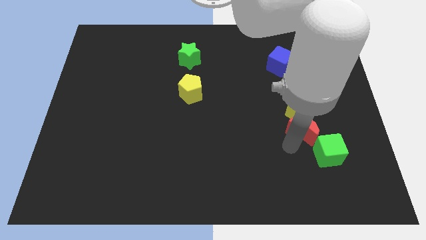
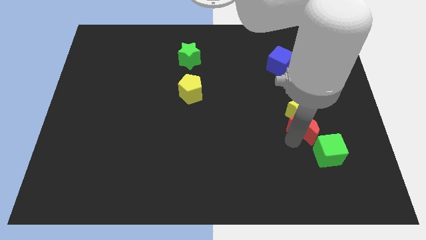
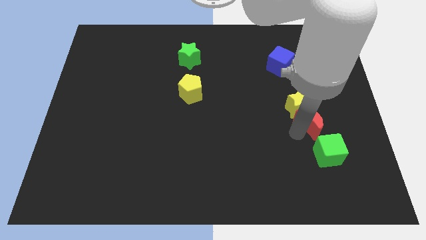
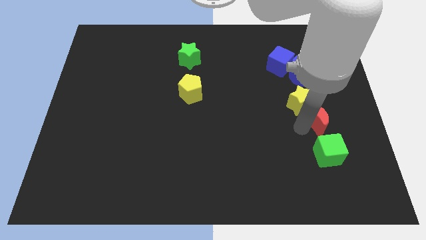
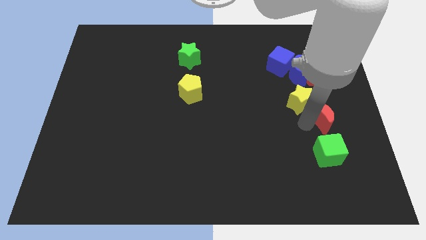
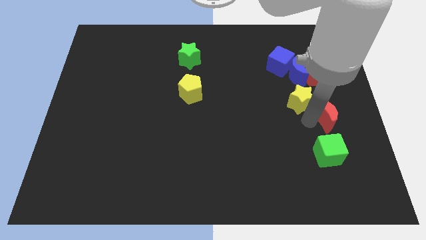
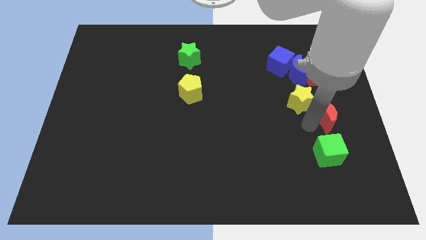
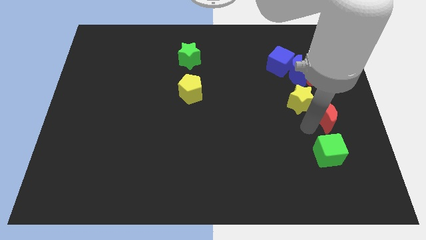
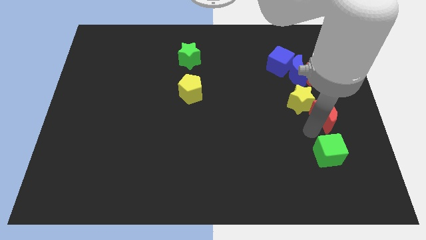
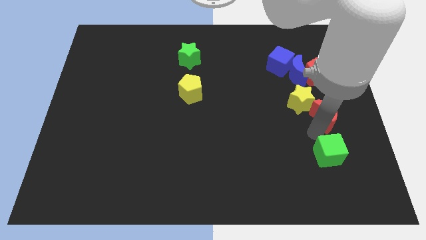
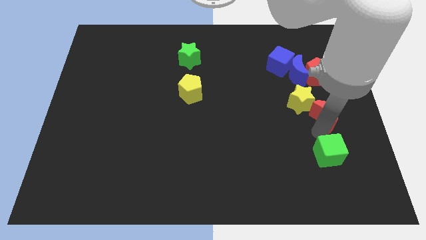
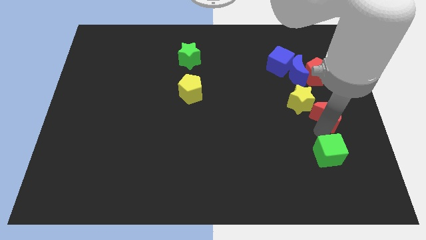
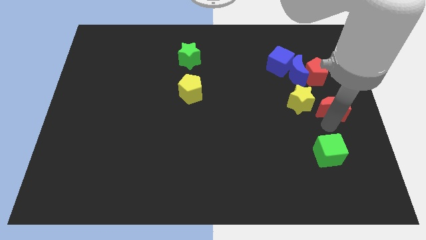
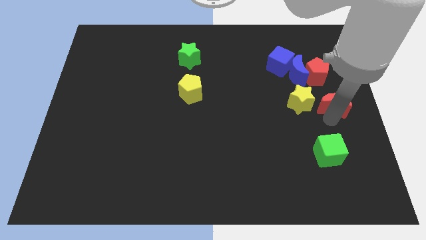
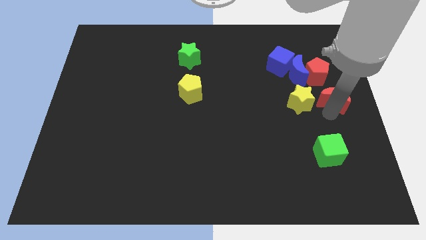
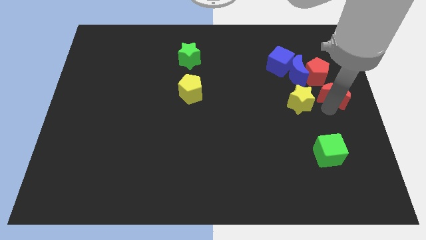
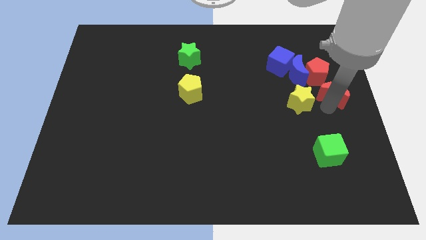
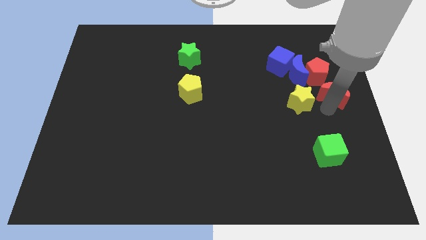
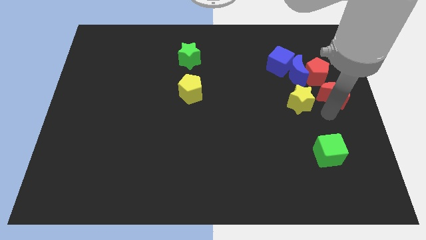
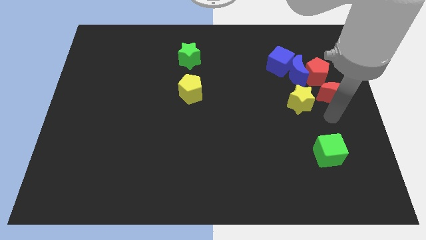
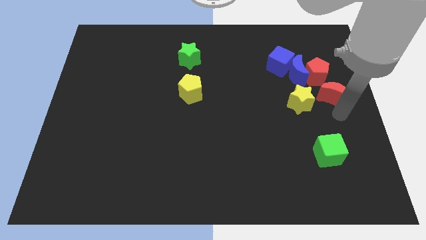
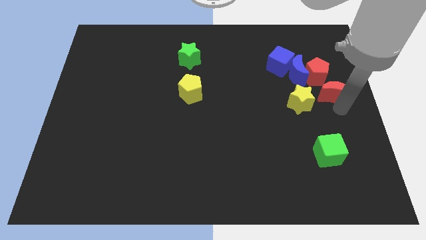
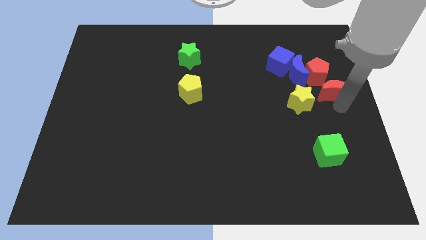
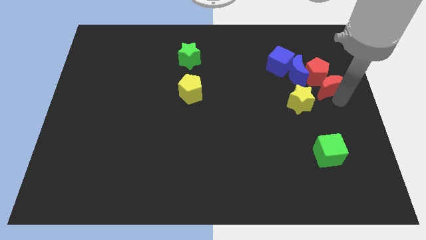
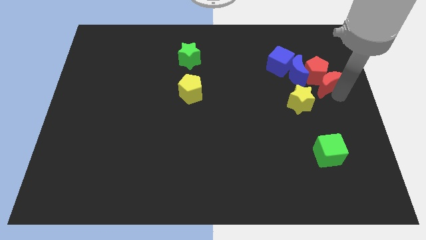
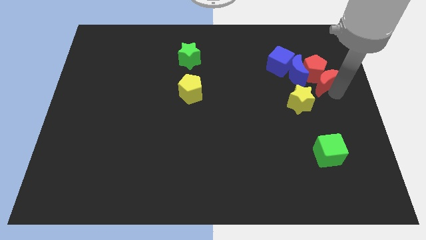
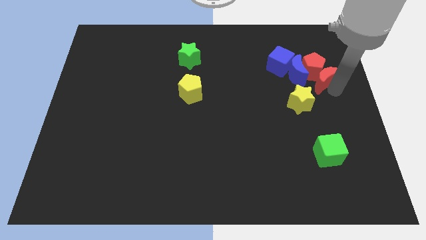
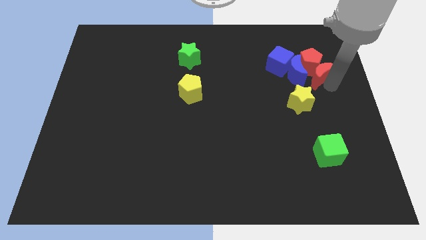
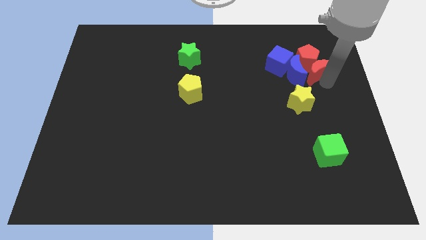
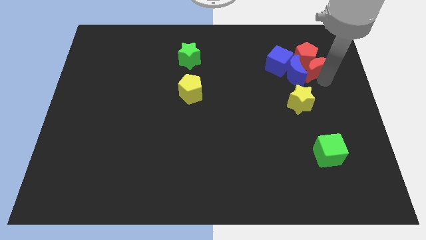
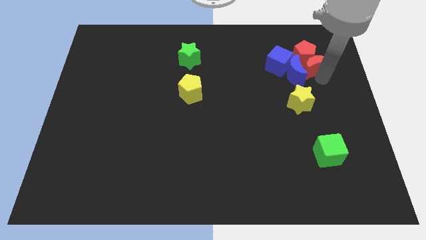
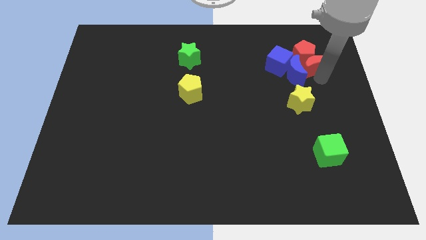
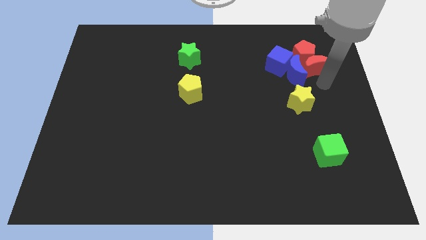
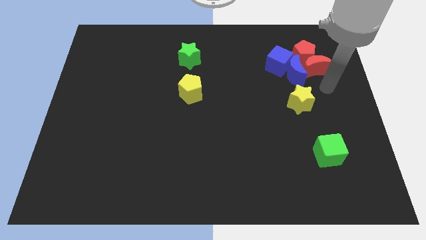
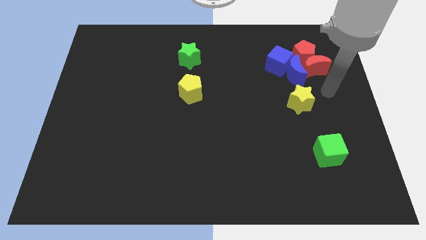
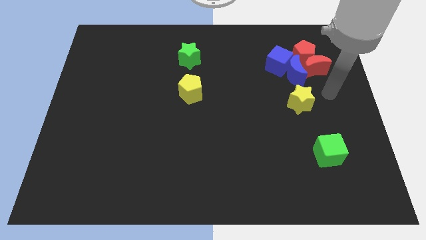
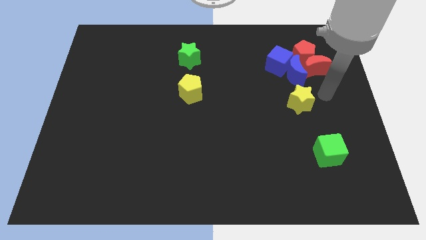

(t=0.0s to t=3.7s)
move the red moon into the red pentagon

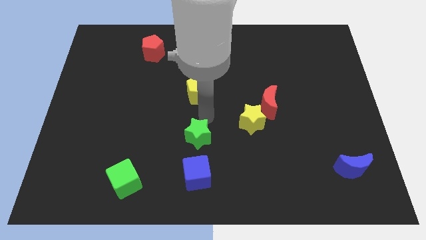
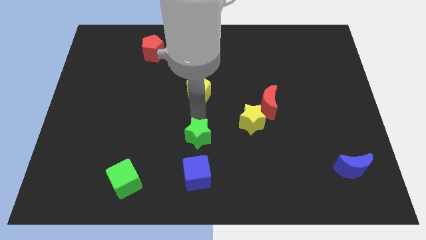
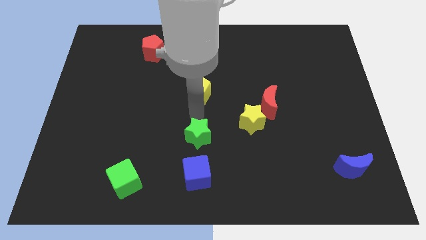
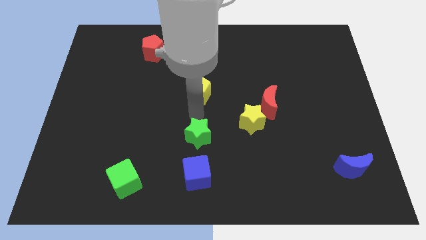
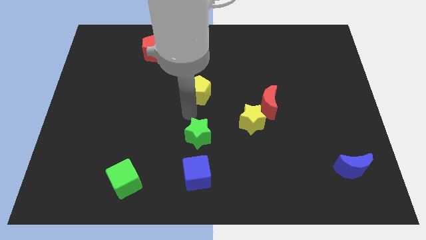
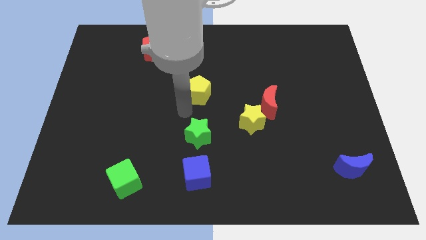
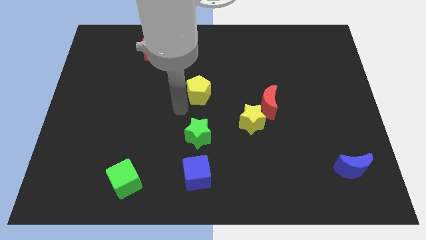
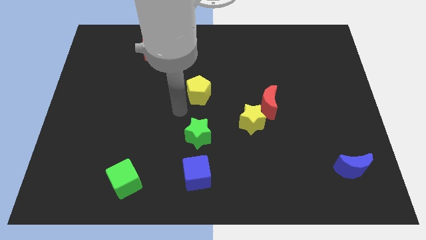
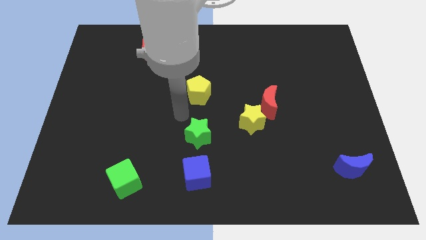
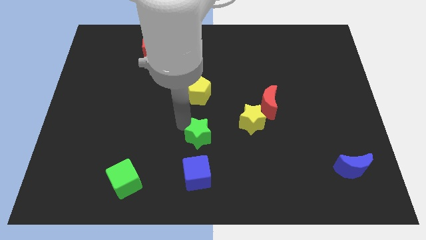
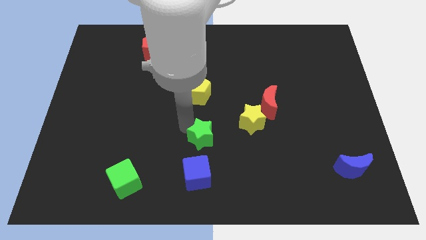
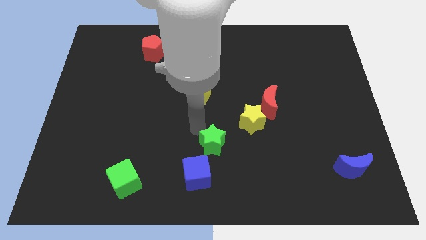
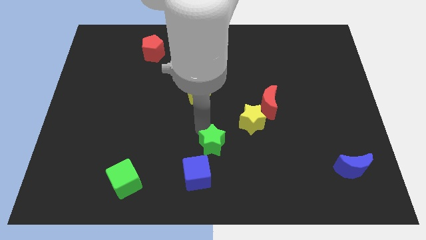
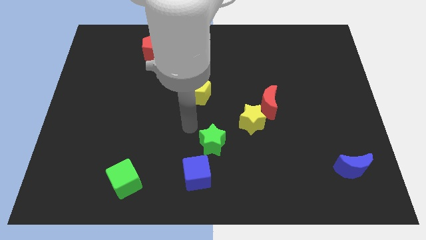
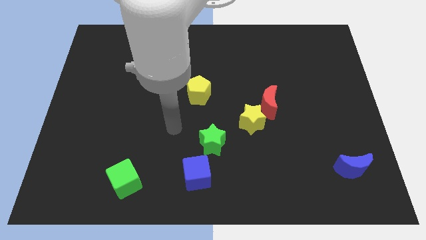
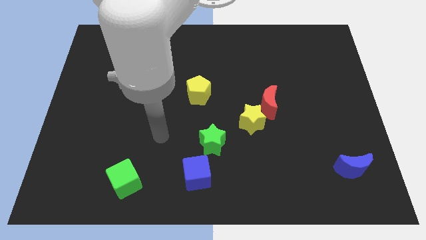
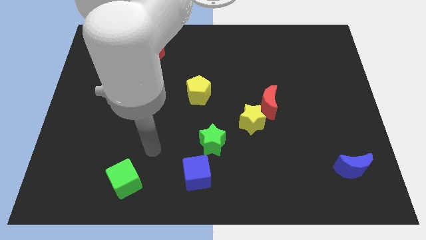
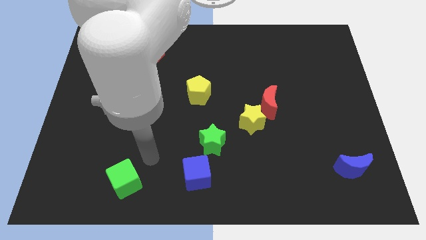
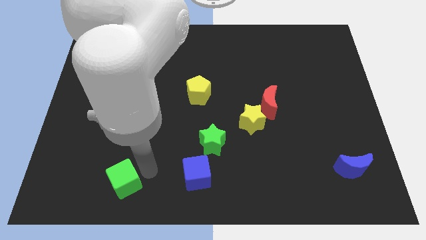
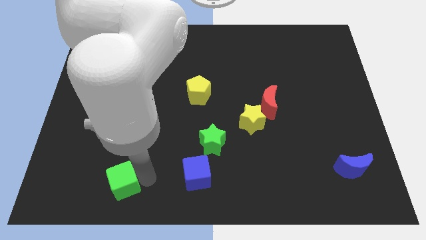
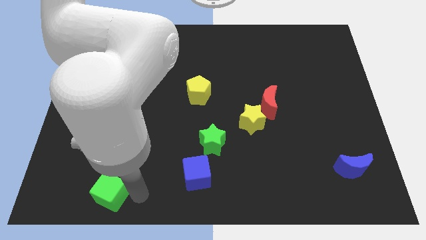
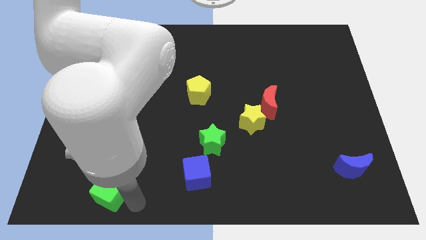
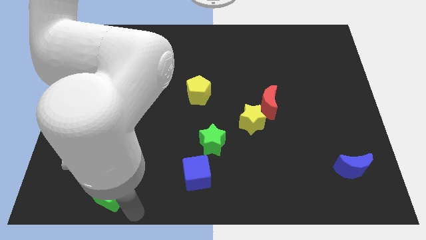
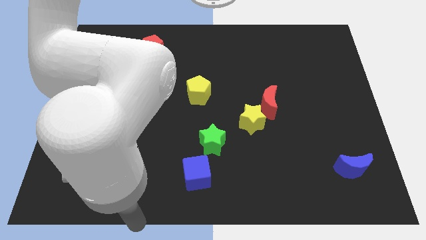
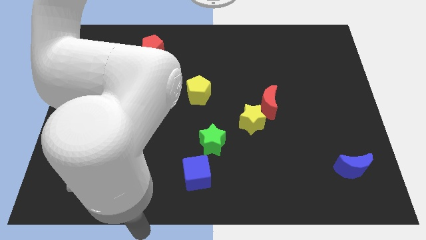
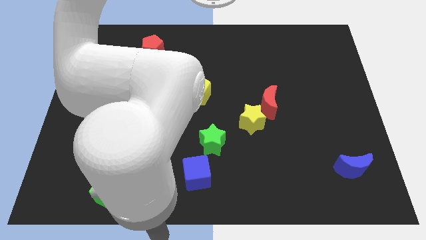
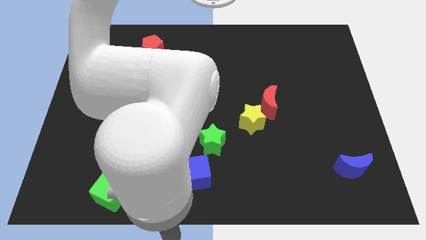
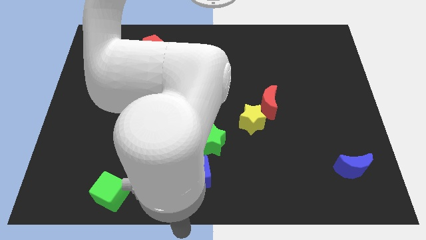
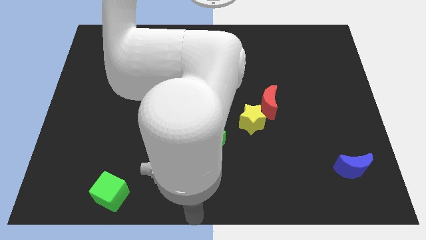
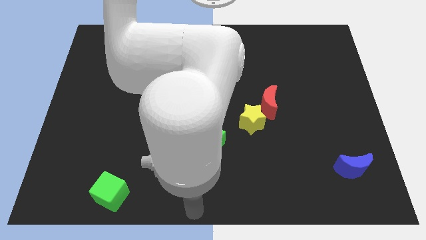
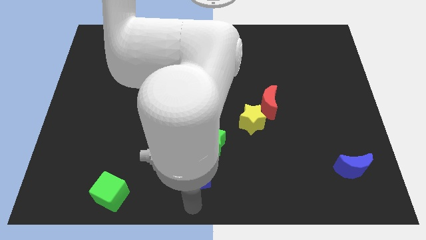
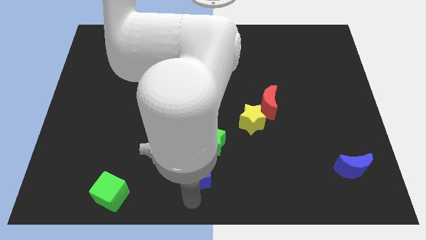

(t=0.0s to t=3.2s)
push green cube slightly towards bottom

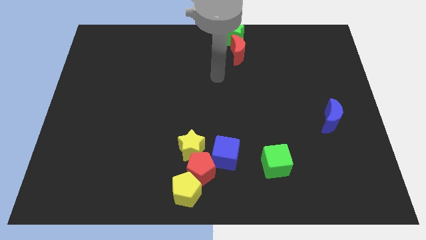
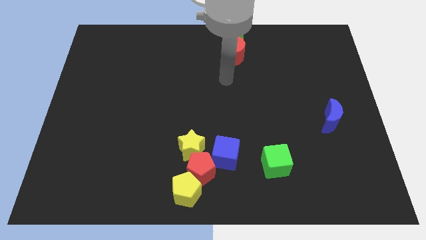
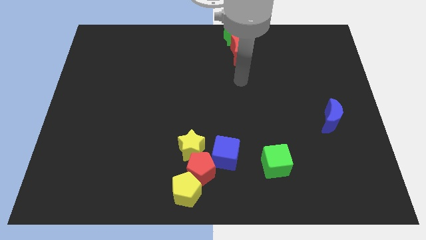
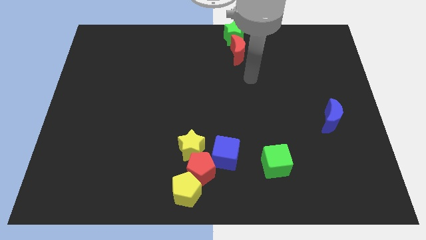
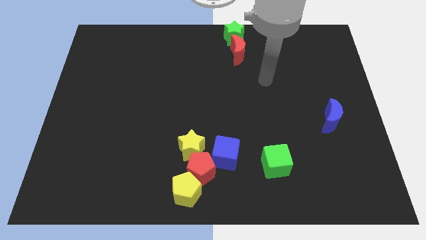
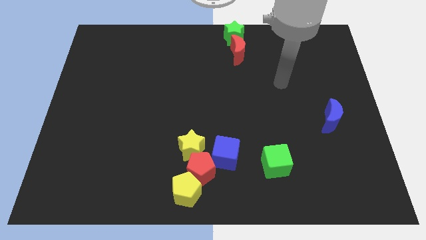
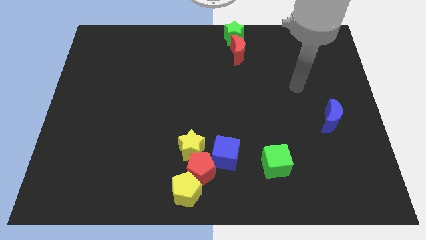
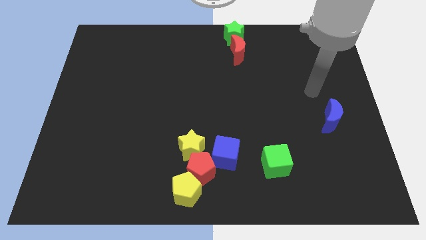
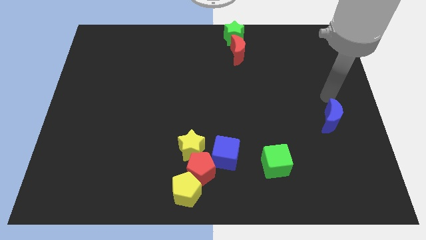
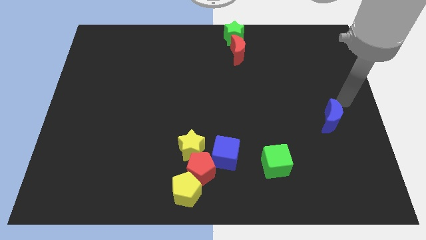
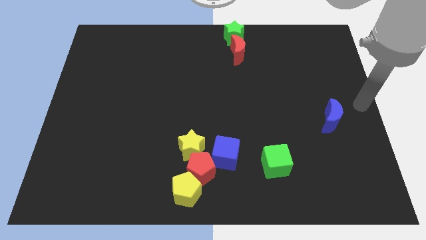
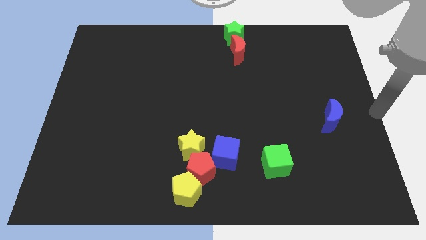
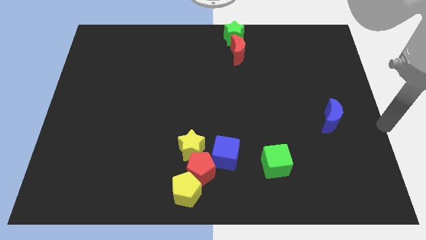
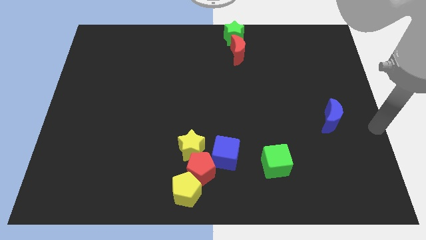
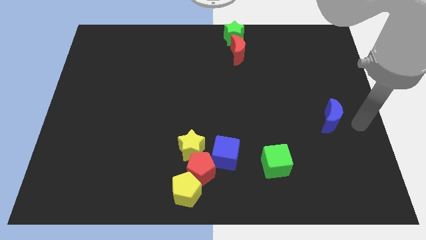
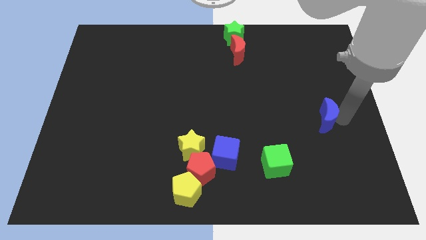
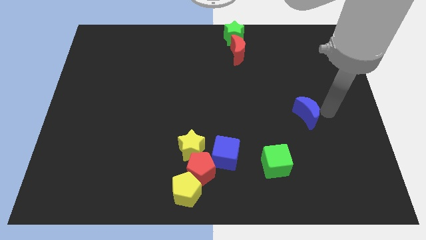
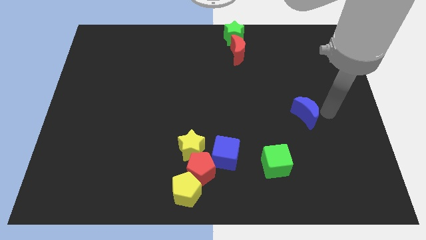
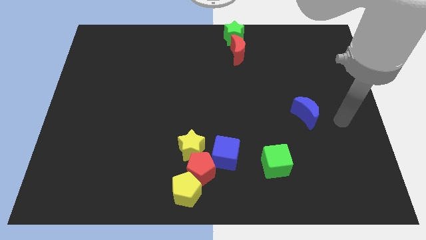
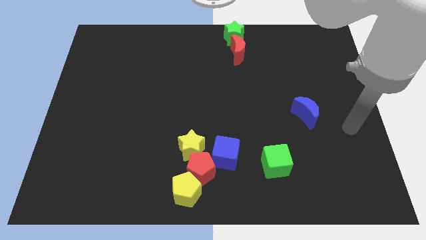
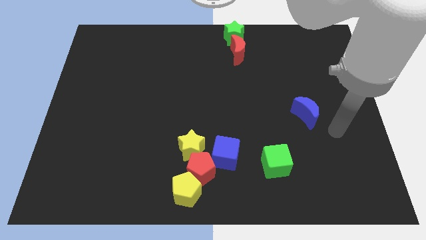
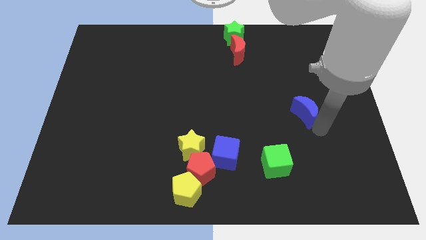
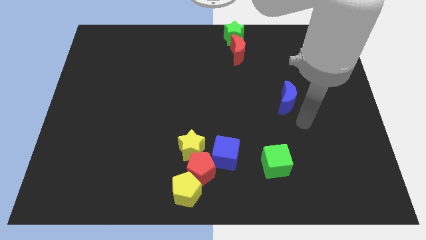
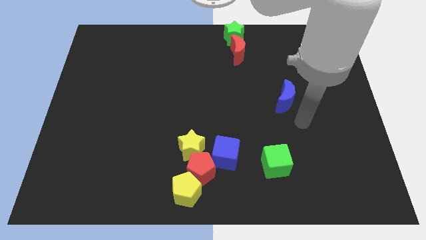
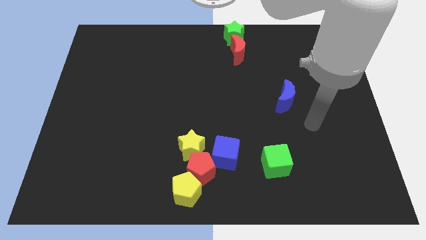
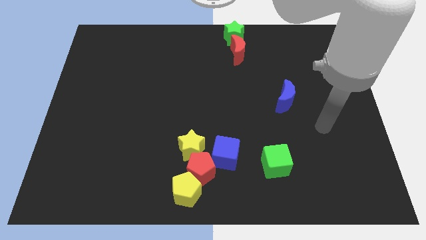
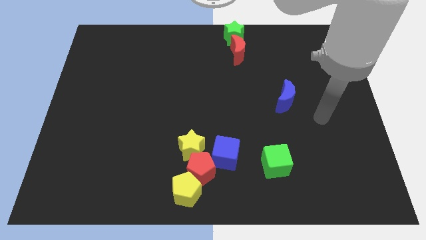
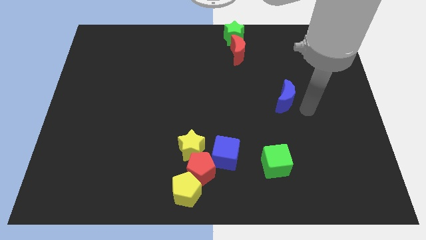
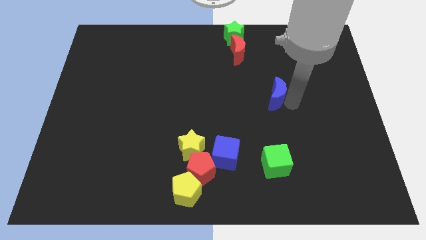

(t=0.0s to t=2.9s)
push the blue crescent to the top of the green cube
